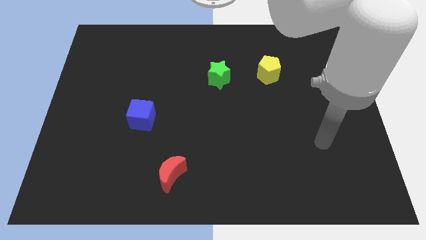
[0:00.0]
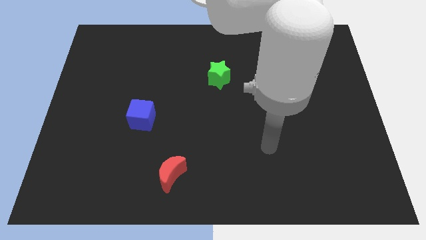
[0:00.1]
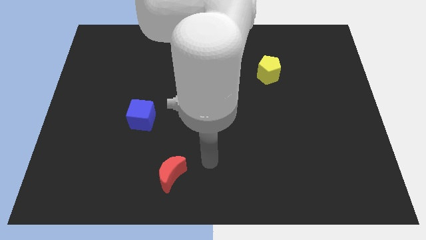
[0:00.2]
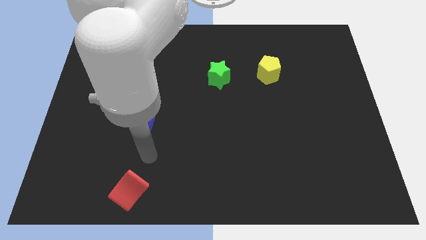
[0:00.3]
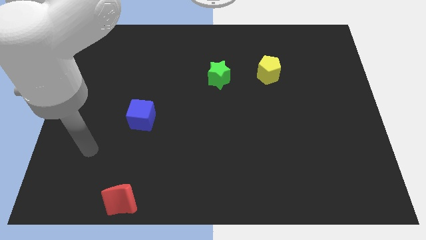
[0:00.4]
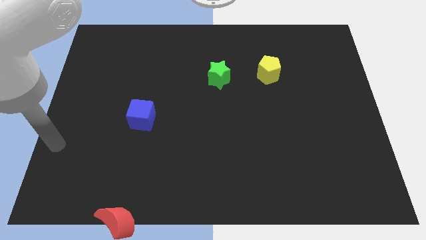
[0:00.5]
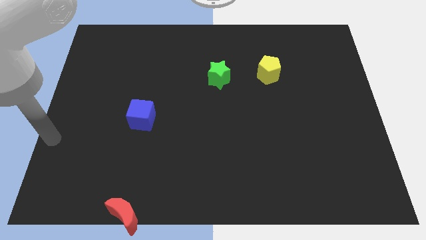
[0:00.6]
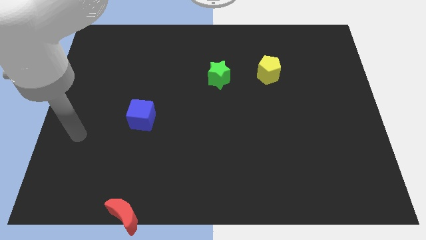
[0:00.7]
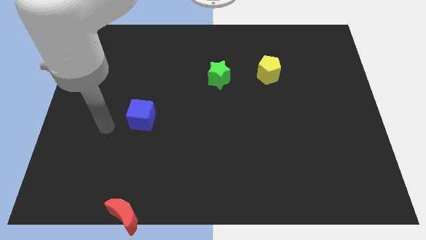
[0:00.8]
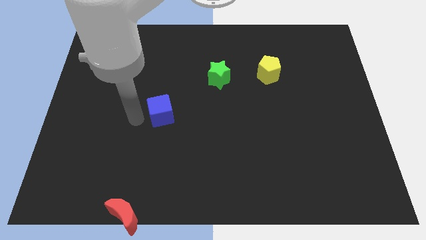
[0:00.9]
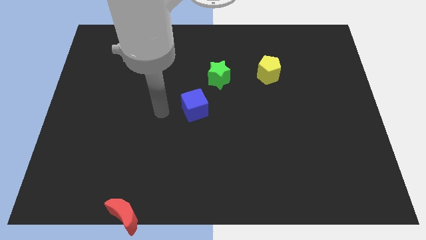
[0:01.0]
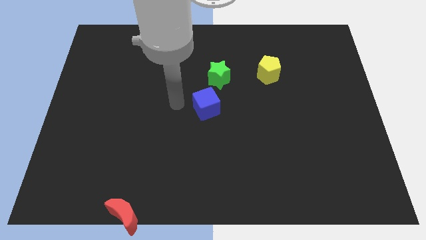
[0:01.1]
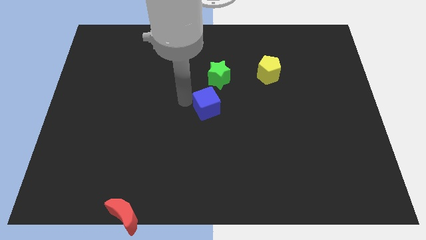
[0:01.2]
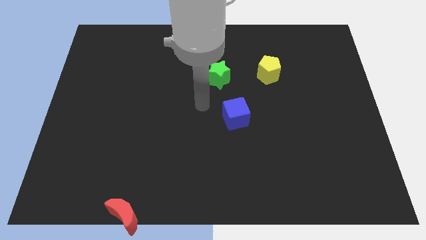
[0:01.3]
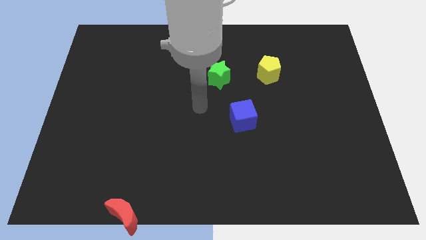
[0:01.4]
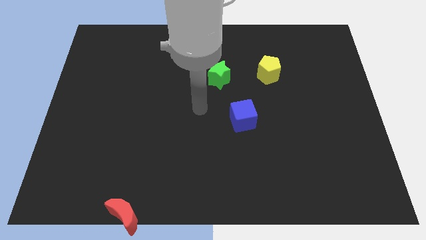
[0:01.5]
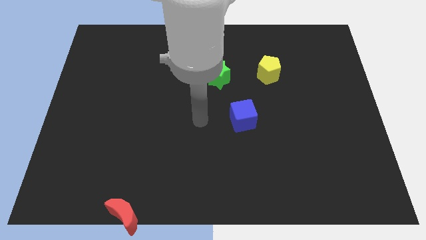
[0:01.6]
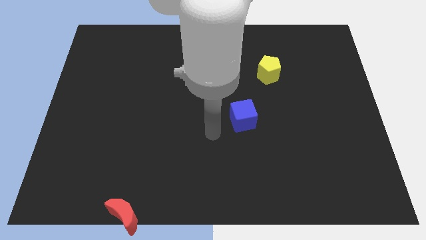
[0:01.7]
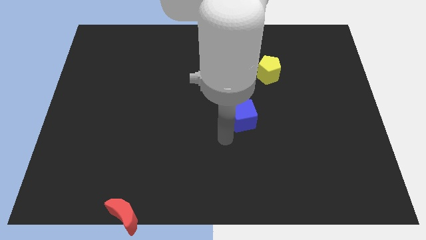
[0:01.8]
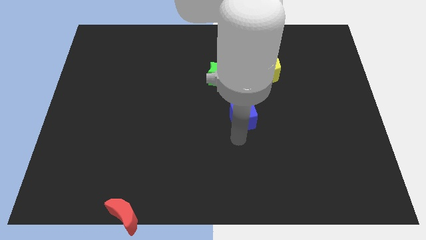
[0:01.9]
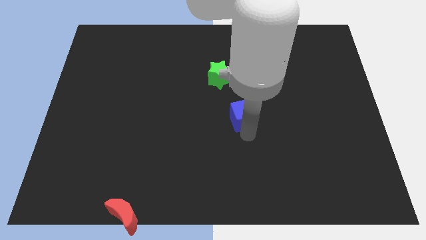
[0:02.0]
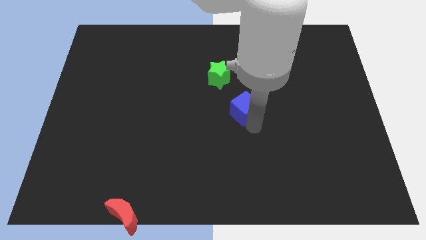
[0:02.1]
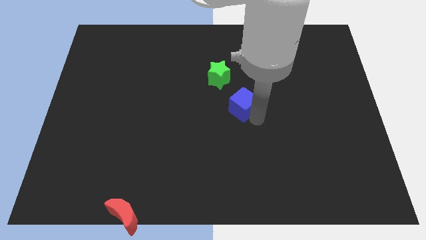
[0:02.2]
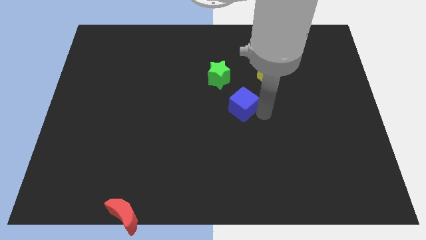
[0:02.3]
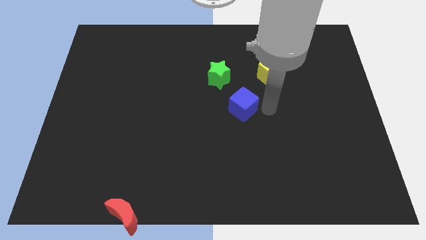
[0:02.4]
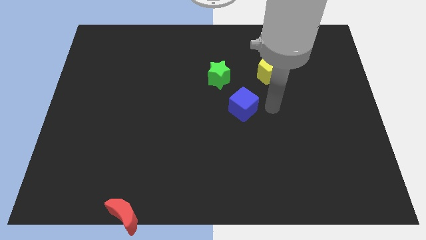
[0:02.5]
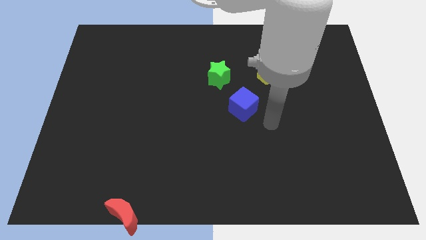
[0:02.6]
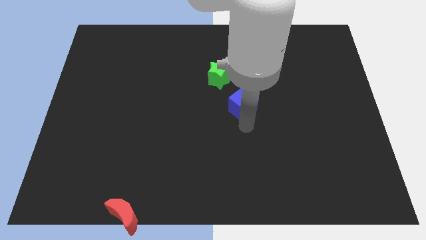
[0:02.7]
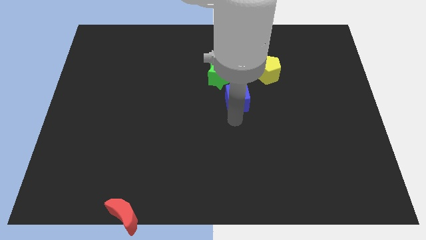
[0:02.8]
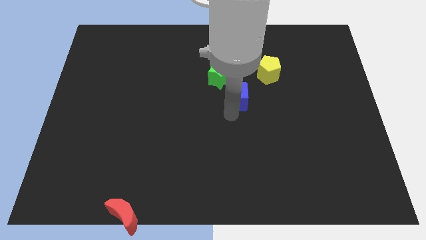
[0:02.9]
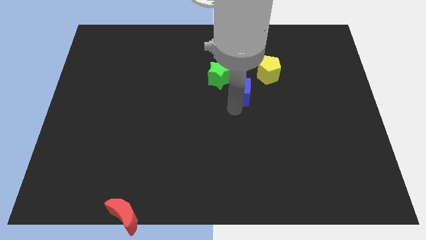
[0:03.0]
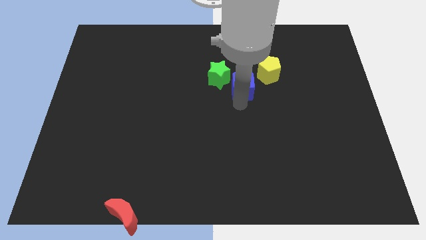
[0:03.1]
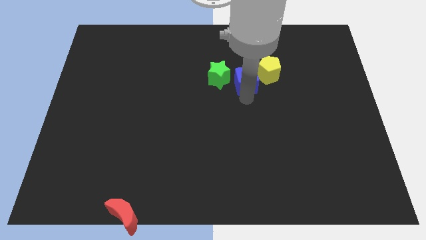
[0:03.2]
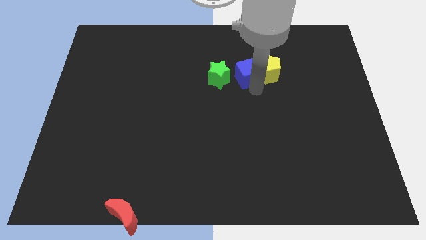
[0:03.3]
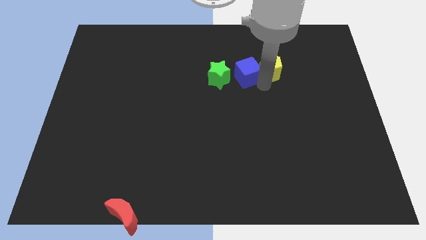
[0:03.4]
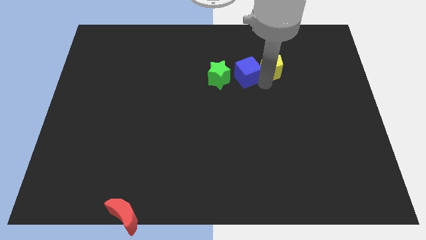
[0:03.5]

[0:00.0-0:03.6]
push the cube close to the pentagon

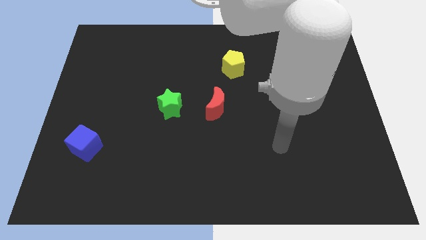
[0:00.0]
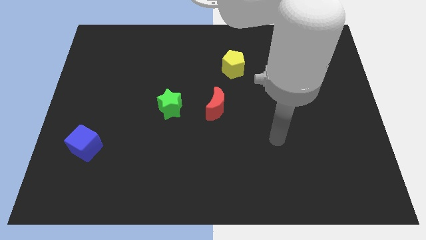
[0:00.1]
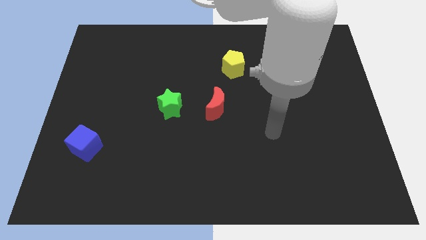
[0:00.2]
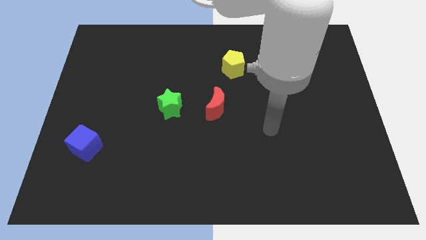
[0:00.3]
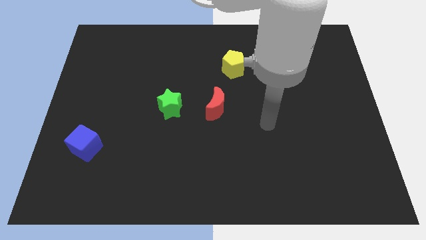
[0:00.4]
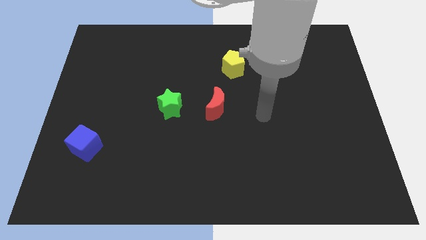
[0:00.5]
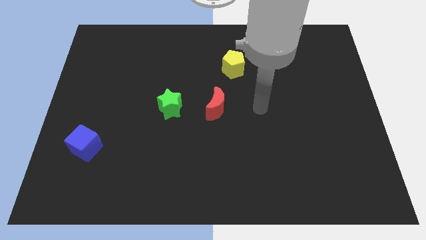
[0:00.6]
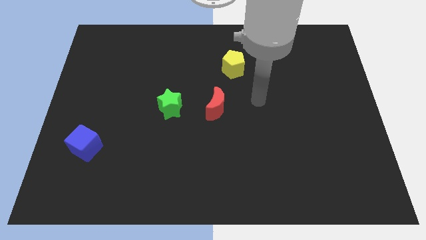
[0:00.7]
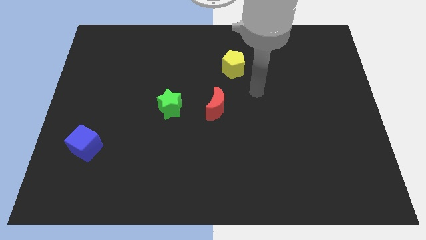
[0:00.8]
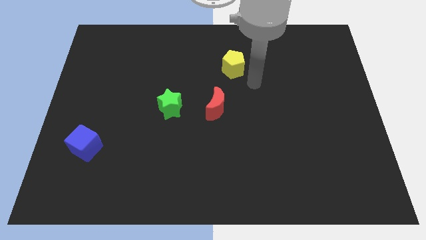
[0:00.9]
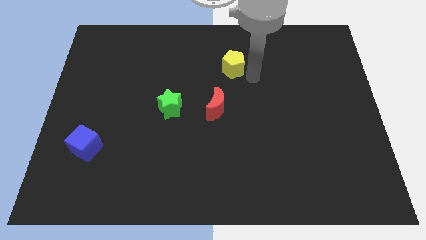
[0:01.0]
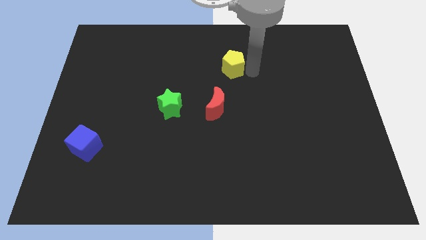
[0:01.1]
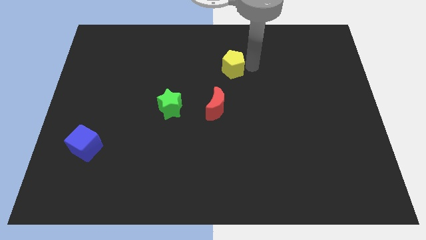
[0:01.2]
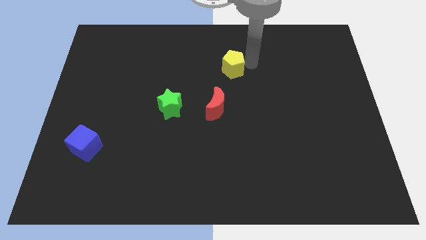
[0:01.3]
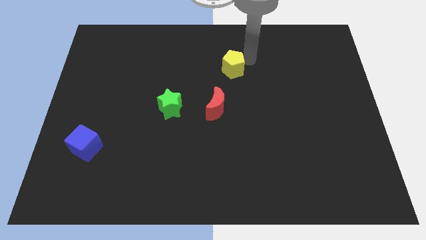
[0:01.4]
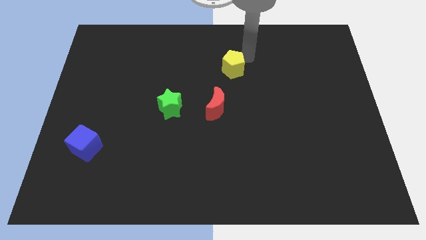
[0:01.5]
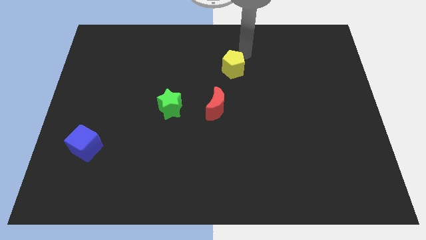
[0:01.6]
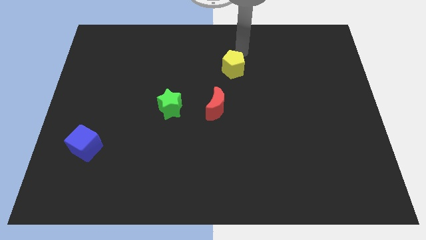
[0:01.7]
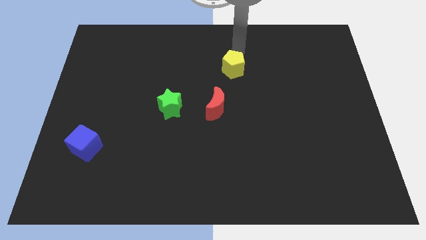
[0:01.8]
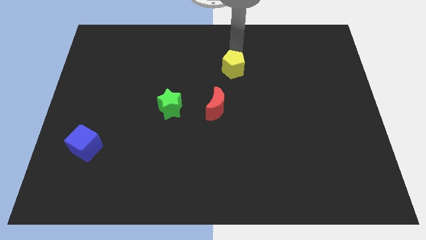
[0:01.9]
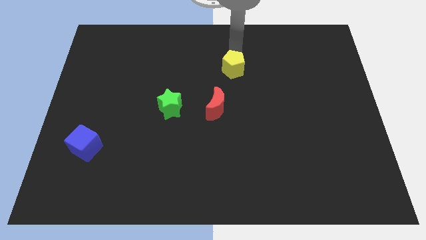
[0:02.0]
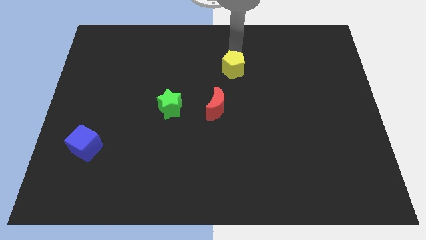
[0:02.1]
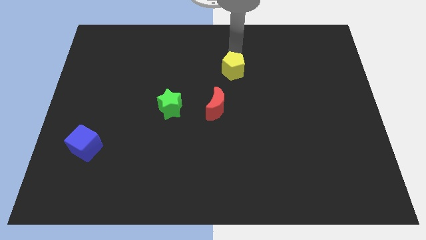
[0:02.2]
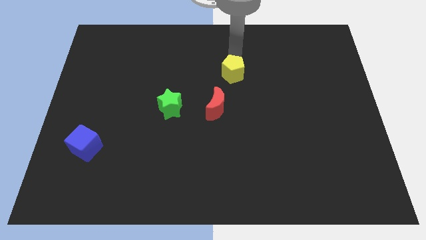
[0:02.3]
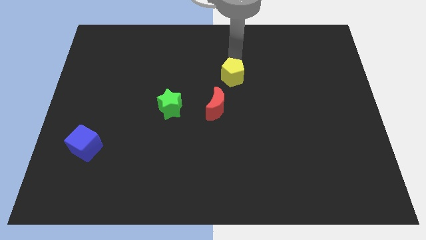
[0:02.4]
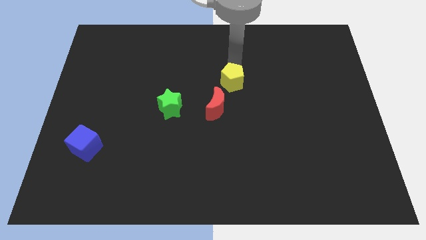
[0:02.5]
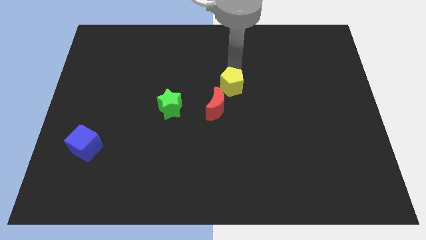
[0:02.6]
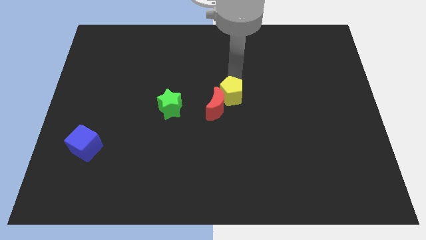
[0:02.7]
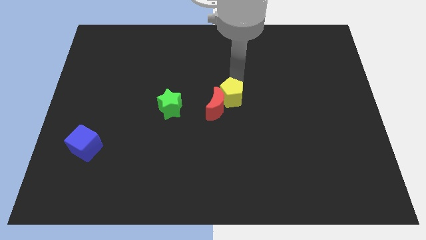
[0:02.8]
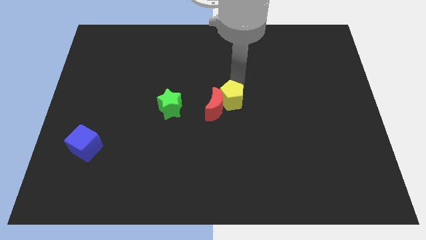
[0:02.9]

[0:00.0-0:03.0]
move the pentagon towards the red moon

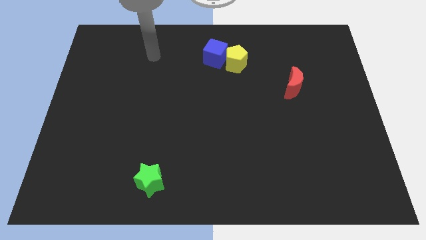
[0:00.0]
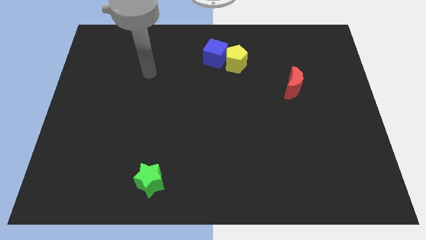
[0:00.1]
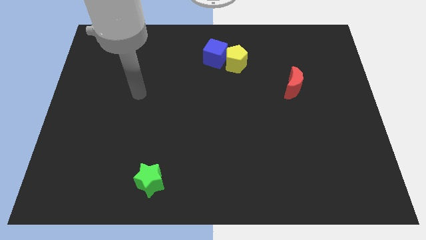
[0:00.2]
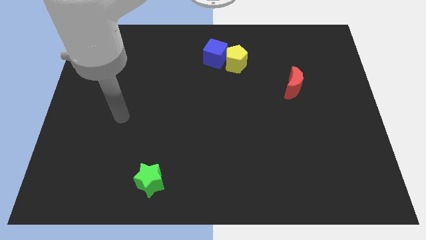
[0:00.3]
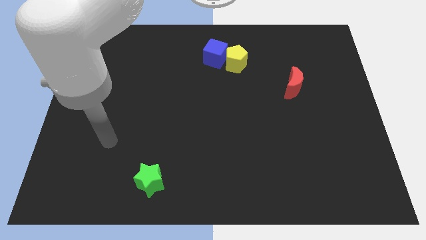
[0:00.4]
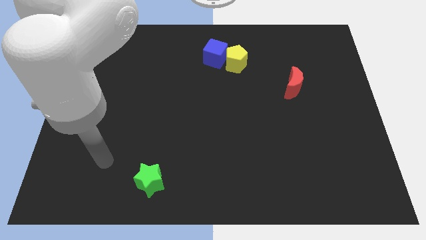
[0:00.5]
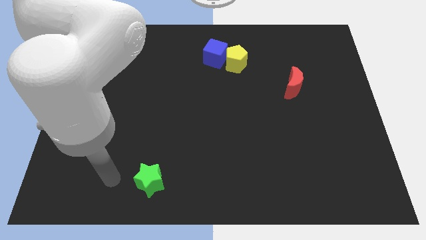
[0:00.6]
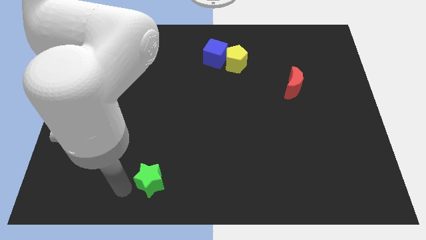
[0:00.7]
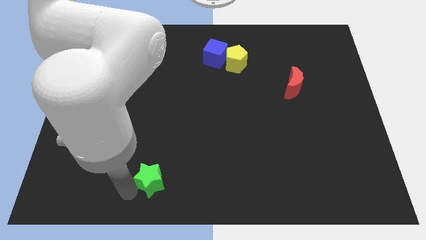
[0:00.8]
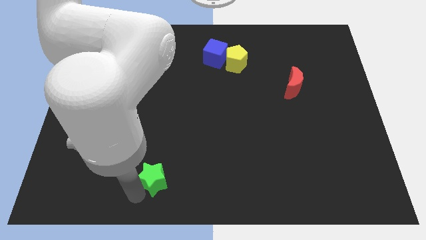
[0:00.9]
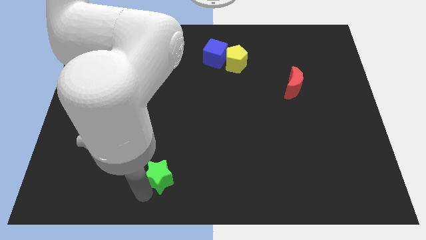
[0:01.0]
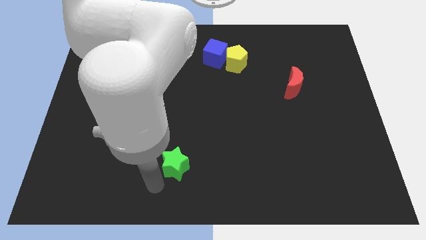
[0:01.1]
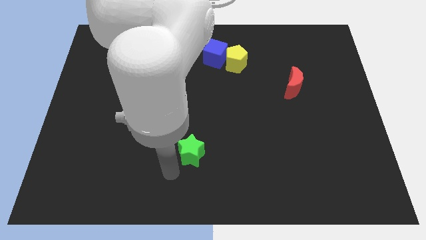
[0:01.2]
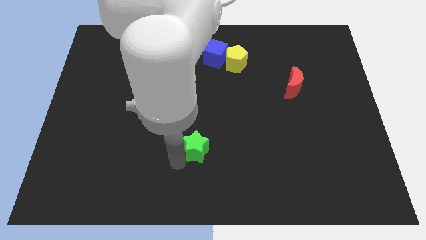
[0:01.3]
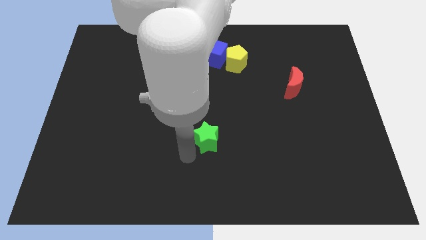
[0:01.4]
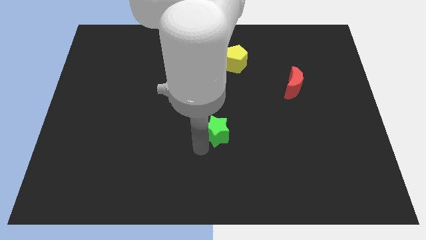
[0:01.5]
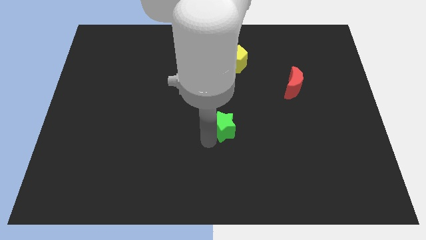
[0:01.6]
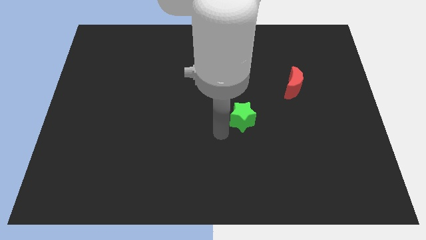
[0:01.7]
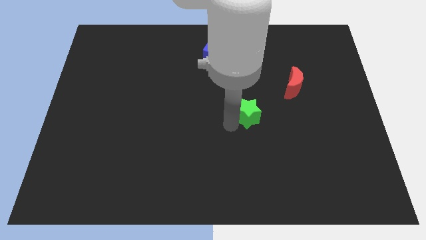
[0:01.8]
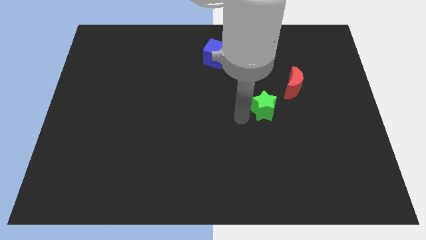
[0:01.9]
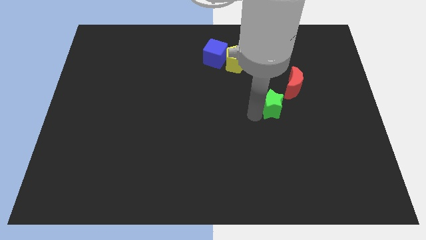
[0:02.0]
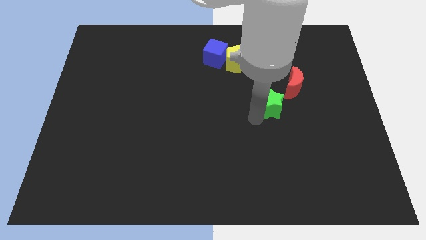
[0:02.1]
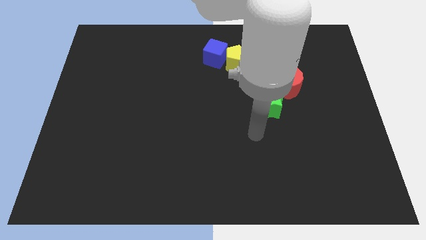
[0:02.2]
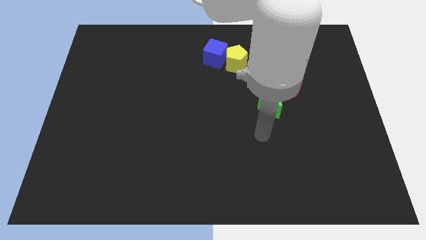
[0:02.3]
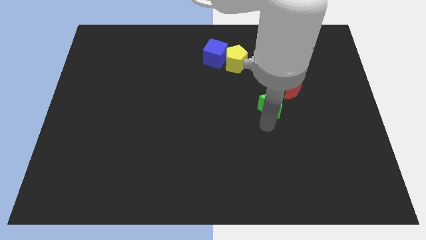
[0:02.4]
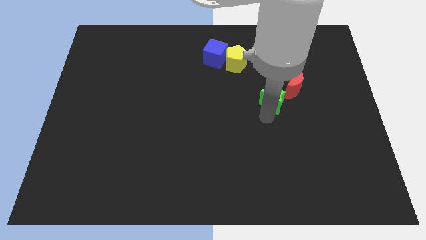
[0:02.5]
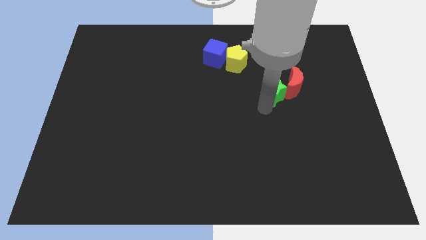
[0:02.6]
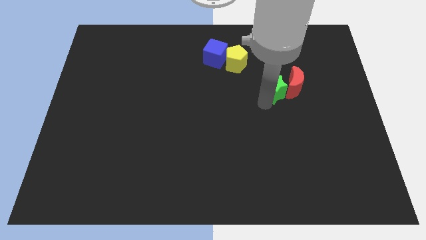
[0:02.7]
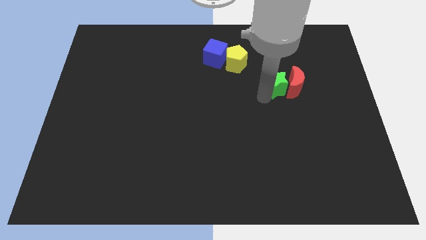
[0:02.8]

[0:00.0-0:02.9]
put the green star close to the red moon
